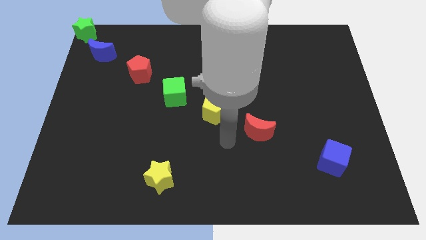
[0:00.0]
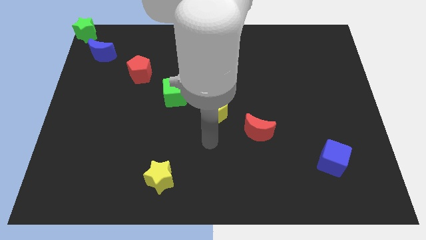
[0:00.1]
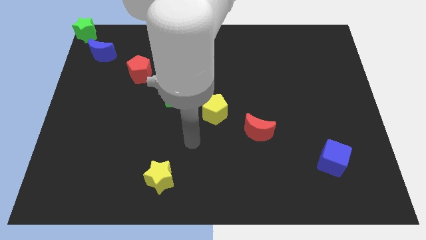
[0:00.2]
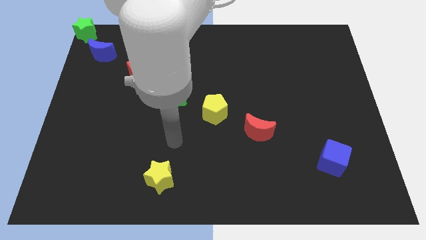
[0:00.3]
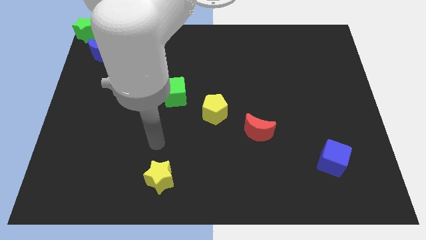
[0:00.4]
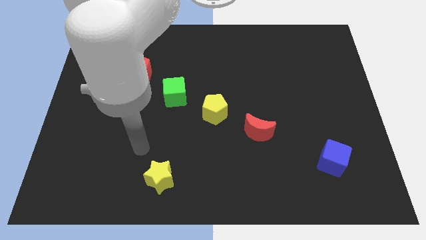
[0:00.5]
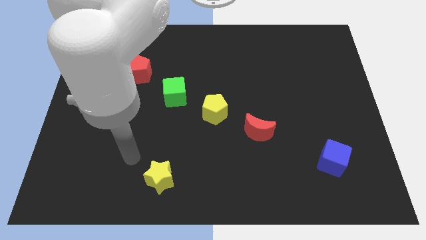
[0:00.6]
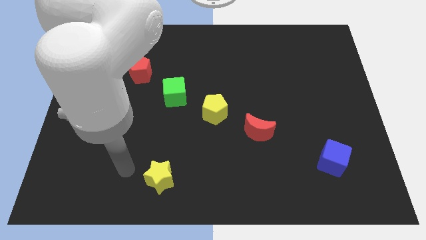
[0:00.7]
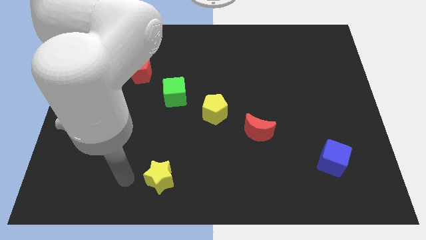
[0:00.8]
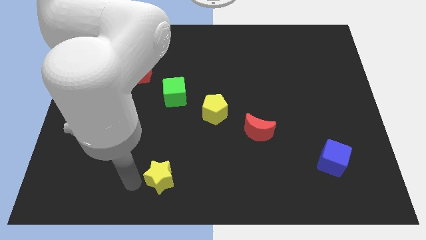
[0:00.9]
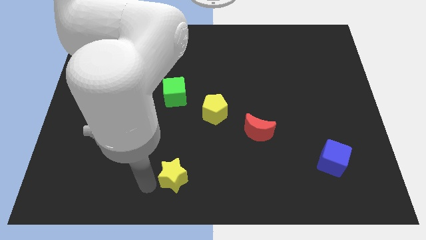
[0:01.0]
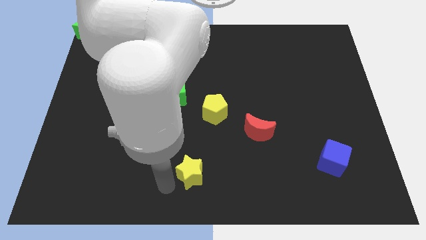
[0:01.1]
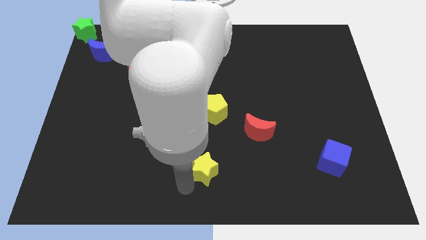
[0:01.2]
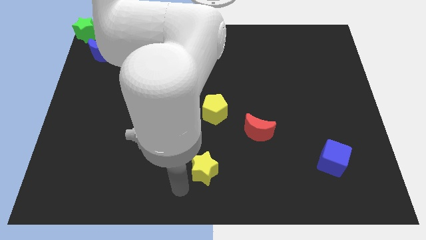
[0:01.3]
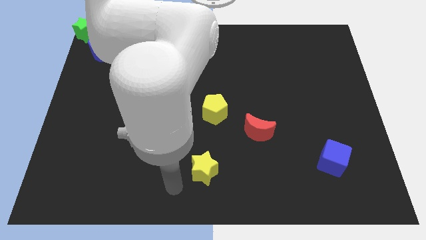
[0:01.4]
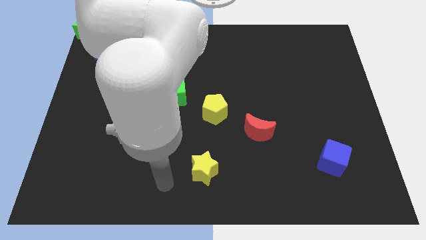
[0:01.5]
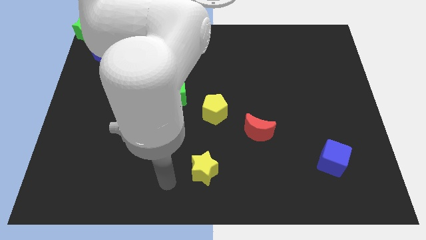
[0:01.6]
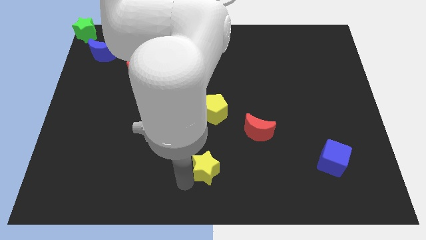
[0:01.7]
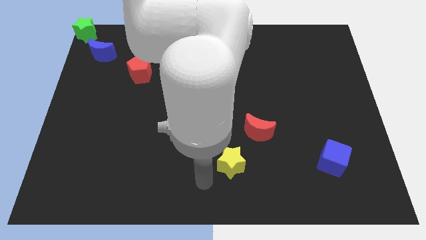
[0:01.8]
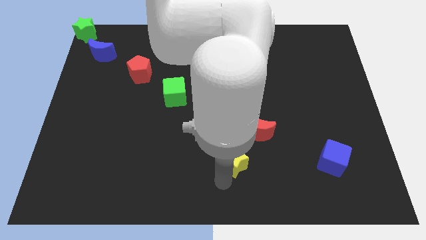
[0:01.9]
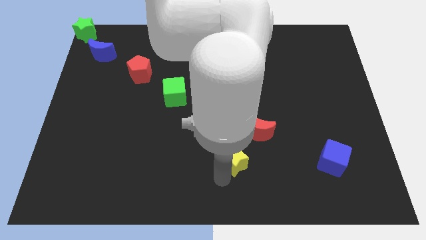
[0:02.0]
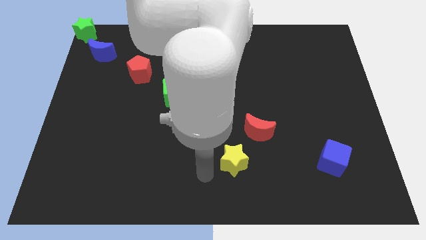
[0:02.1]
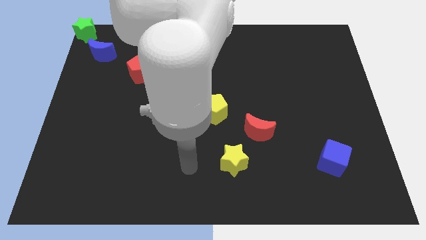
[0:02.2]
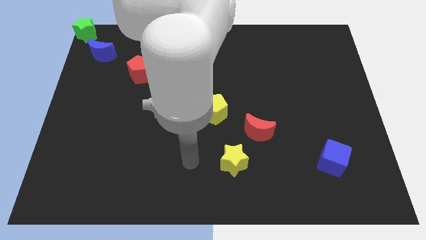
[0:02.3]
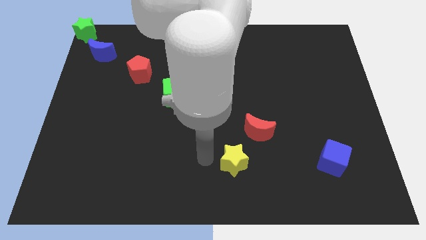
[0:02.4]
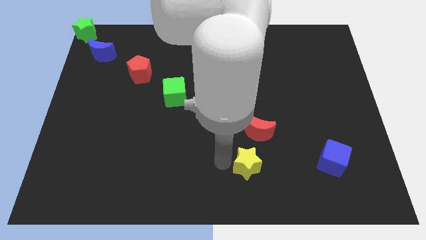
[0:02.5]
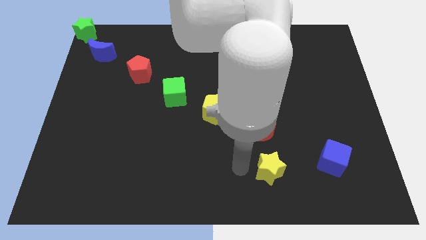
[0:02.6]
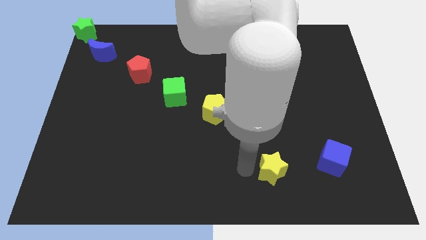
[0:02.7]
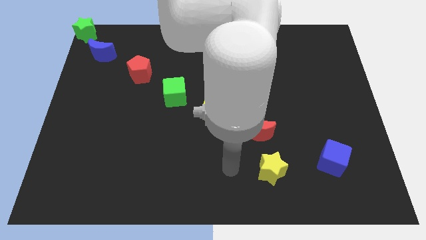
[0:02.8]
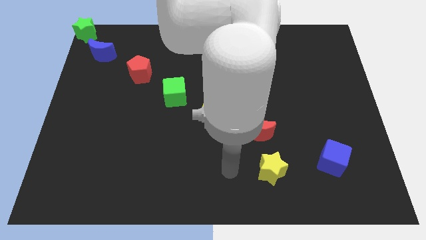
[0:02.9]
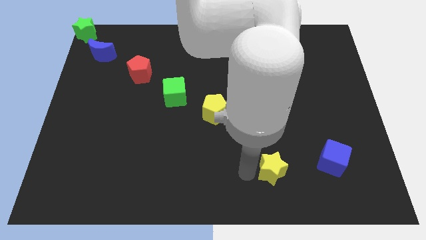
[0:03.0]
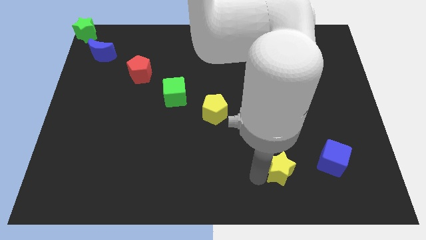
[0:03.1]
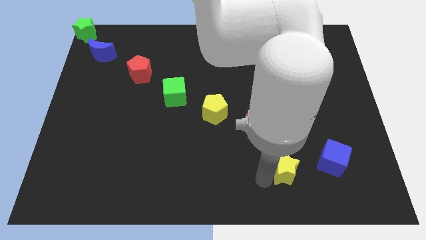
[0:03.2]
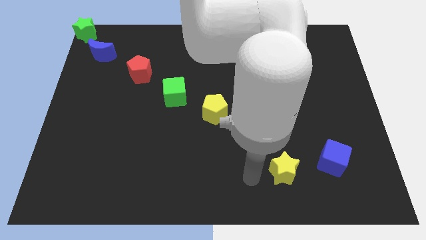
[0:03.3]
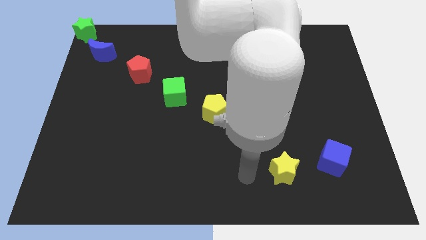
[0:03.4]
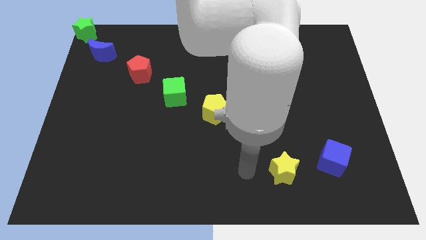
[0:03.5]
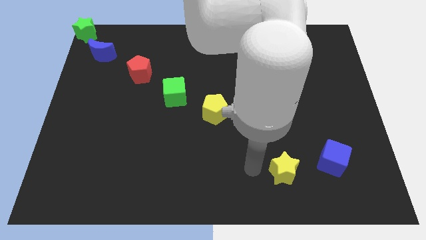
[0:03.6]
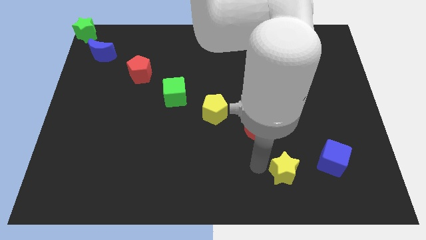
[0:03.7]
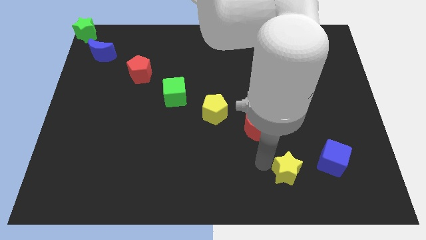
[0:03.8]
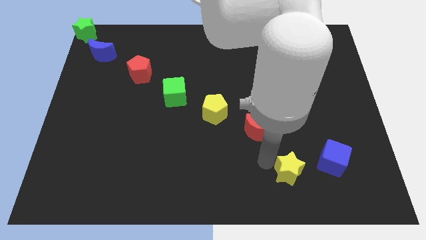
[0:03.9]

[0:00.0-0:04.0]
push the yellow star slightly to the right of the board

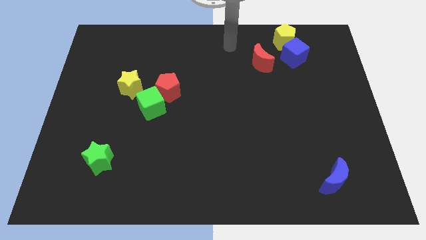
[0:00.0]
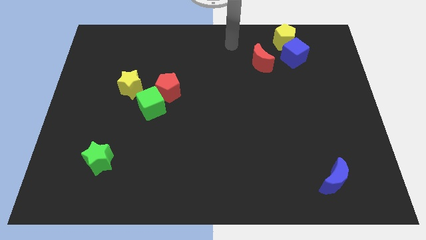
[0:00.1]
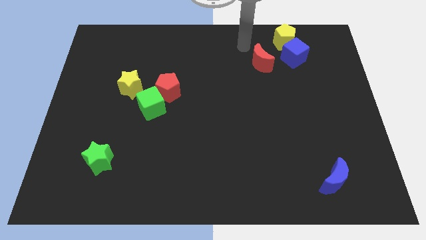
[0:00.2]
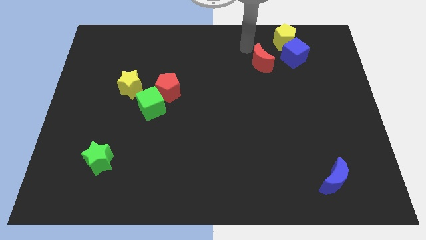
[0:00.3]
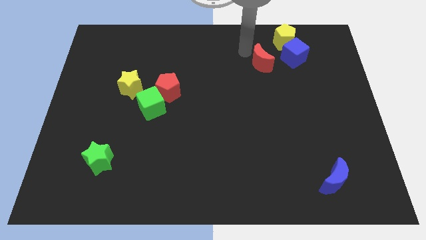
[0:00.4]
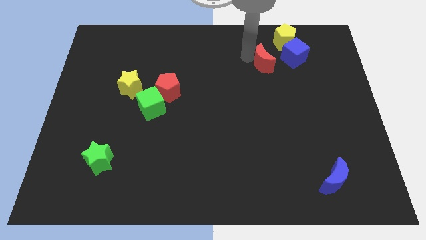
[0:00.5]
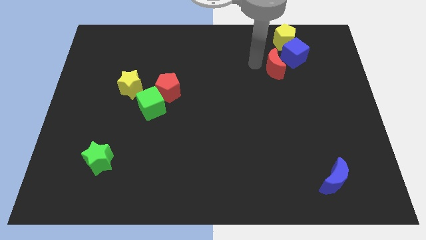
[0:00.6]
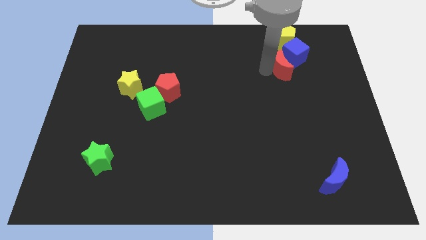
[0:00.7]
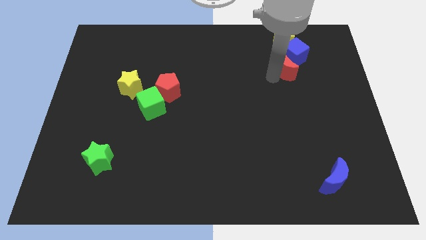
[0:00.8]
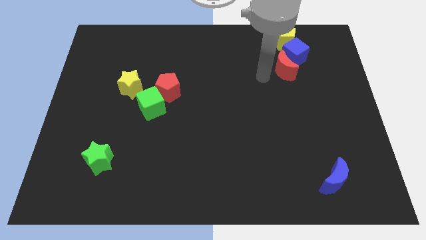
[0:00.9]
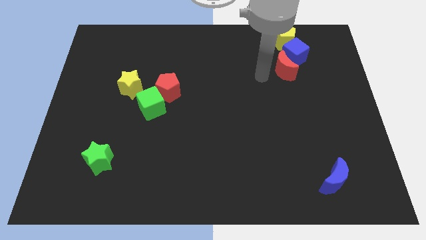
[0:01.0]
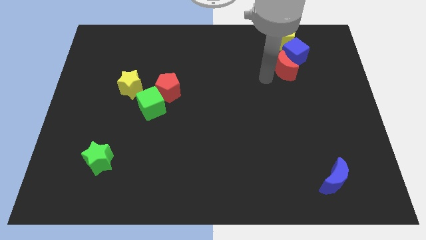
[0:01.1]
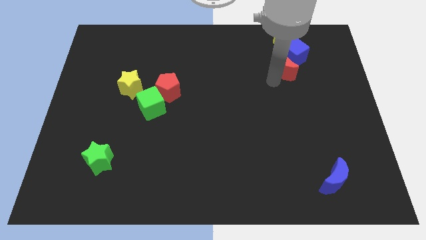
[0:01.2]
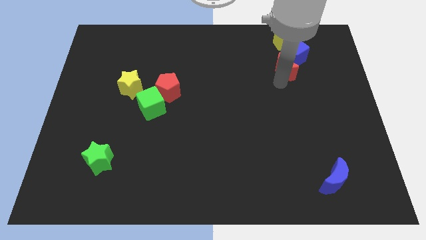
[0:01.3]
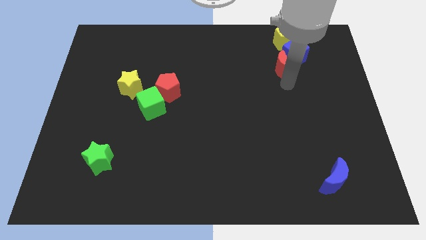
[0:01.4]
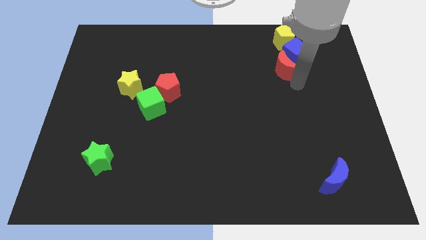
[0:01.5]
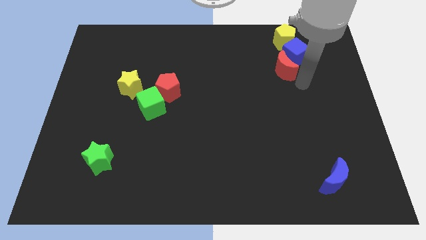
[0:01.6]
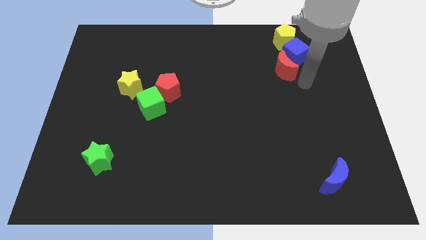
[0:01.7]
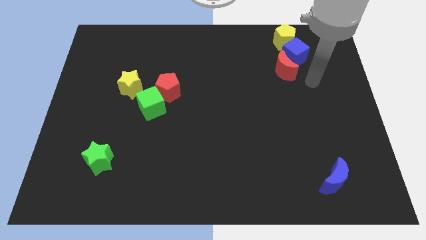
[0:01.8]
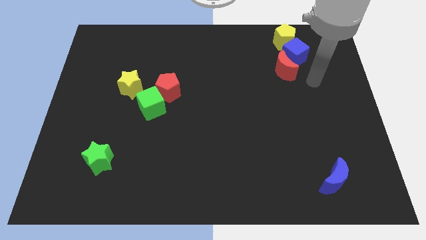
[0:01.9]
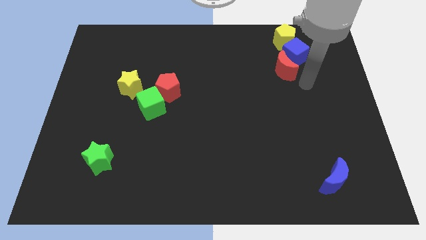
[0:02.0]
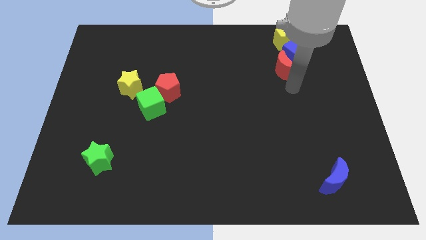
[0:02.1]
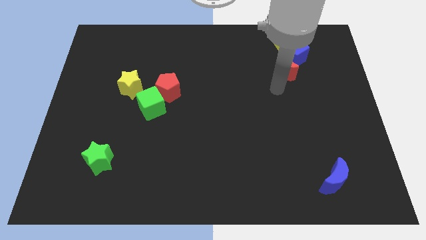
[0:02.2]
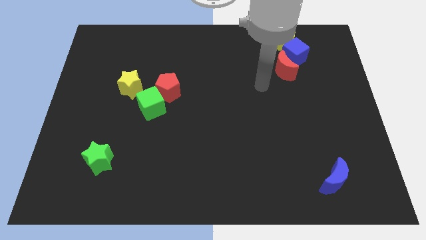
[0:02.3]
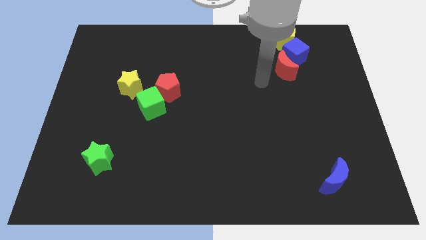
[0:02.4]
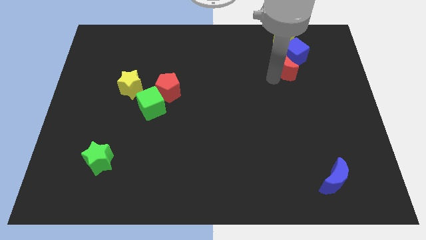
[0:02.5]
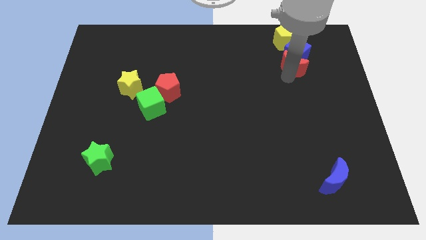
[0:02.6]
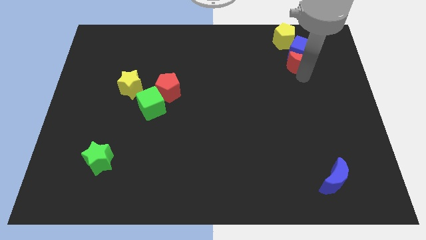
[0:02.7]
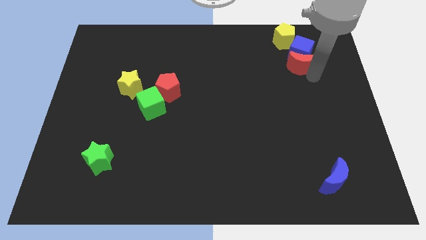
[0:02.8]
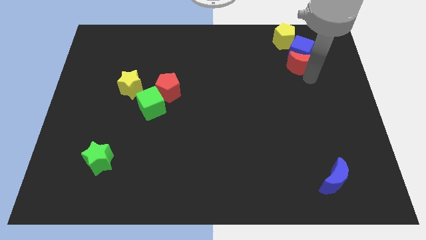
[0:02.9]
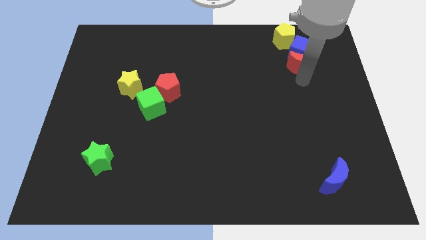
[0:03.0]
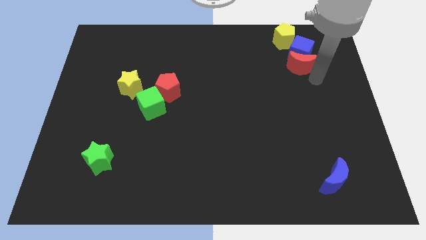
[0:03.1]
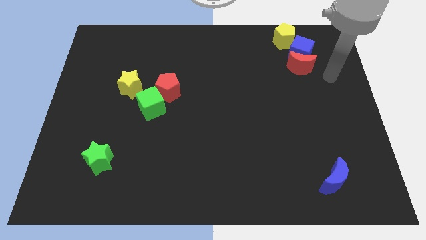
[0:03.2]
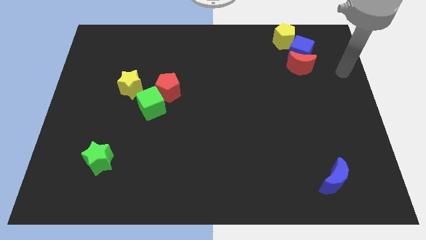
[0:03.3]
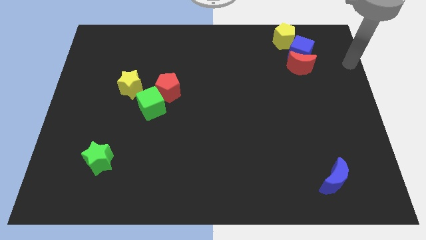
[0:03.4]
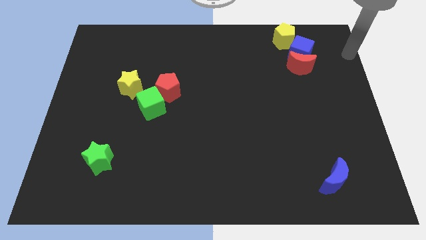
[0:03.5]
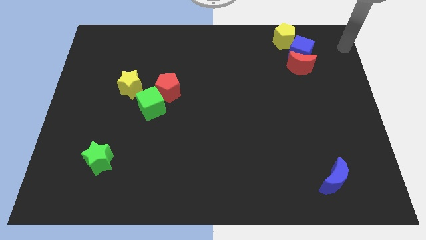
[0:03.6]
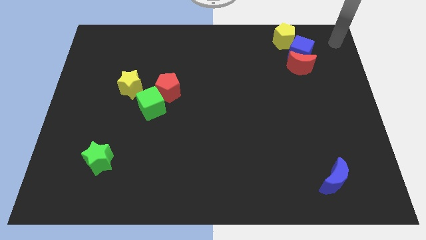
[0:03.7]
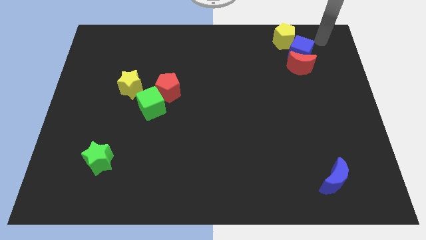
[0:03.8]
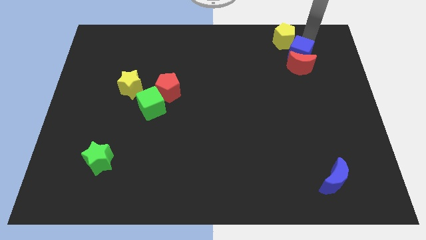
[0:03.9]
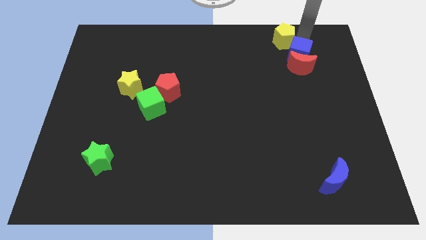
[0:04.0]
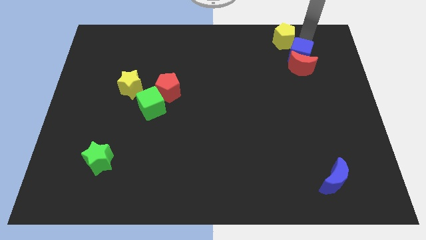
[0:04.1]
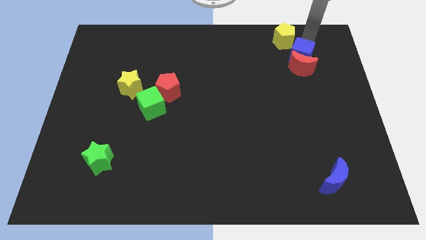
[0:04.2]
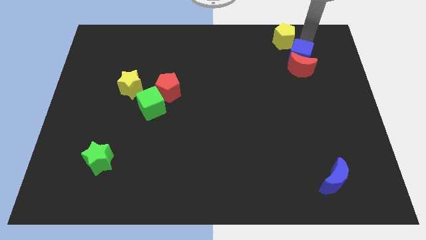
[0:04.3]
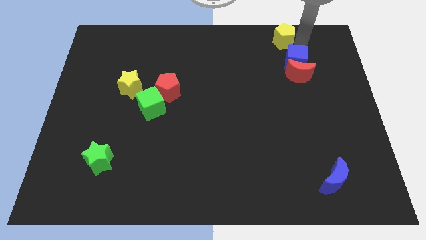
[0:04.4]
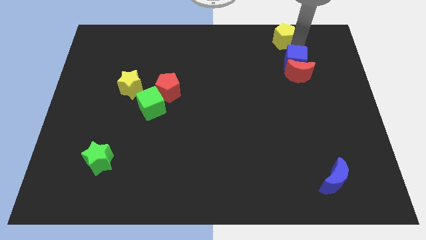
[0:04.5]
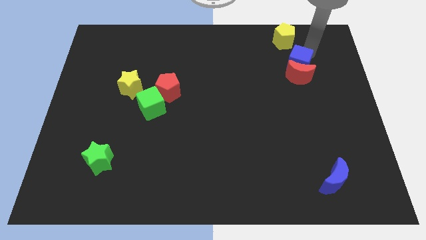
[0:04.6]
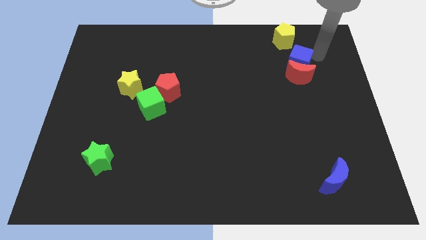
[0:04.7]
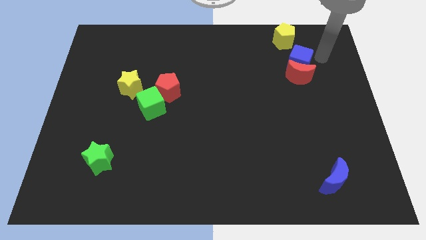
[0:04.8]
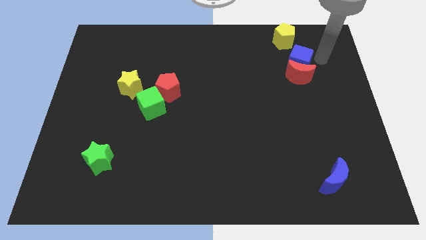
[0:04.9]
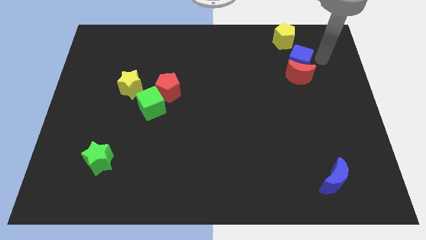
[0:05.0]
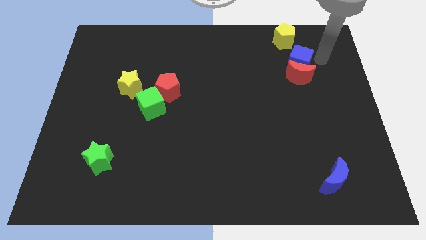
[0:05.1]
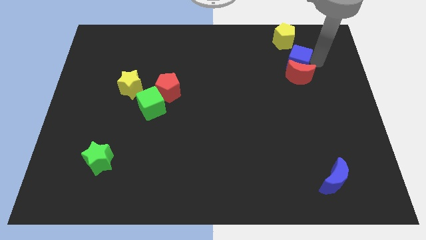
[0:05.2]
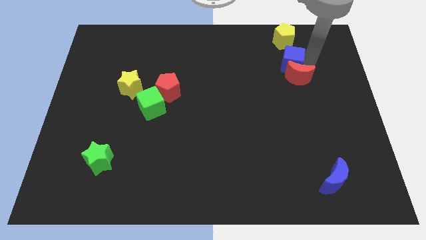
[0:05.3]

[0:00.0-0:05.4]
arrange the yellow pentagonblue cube and red moon in a line
